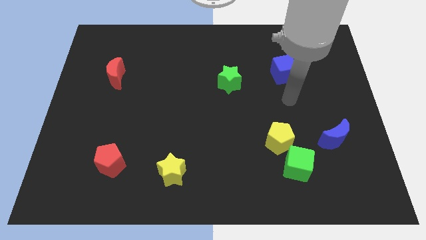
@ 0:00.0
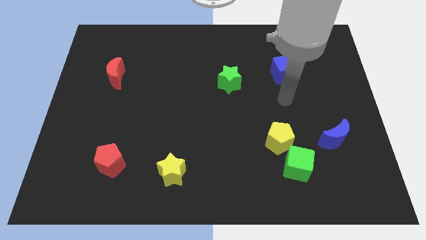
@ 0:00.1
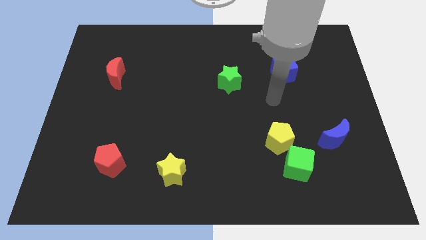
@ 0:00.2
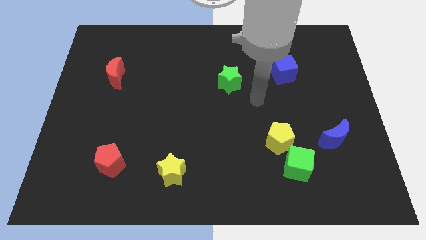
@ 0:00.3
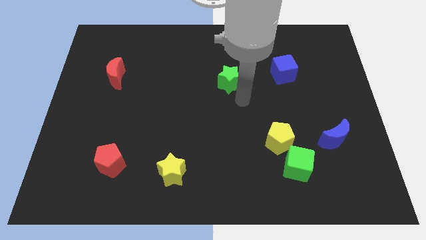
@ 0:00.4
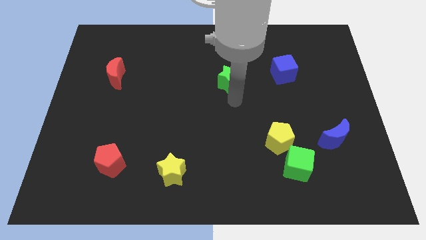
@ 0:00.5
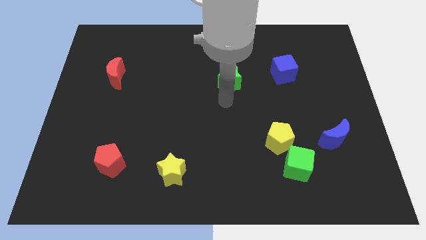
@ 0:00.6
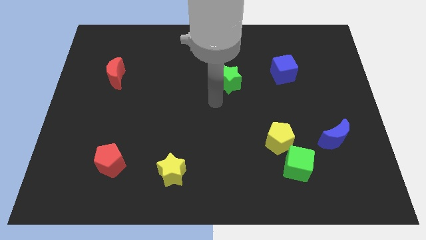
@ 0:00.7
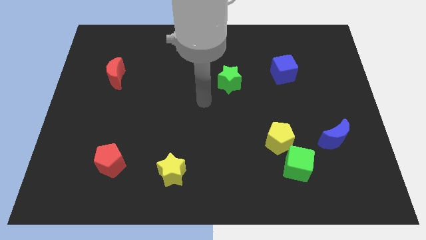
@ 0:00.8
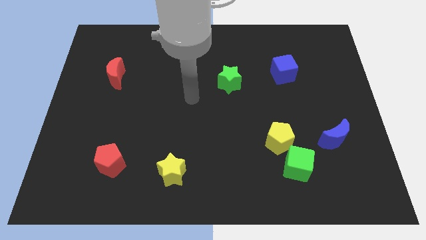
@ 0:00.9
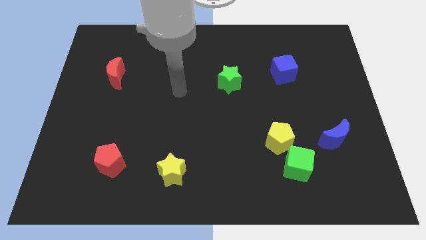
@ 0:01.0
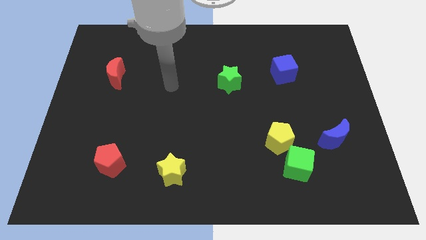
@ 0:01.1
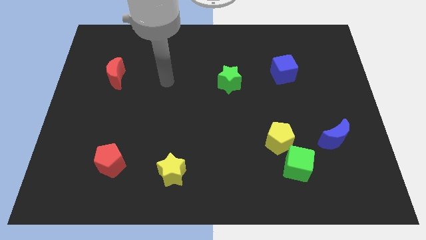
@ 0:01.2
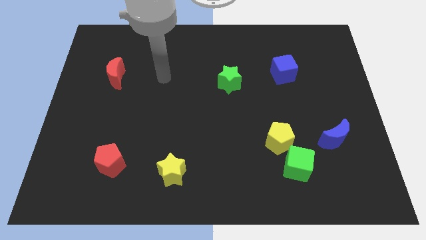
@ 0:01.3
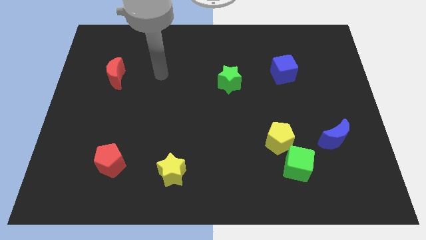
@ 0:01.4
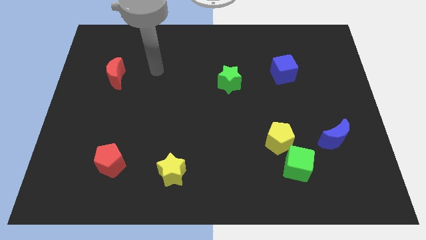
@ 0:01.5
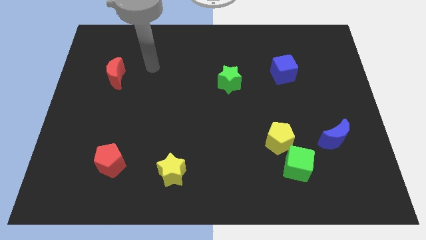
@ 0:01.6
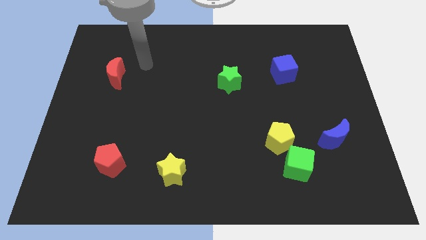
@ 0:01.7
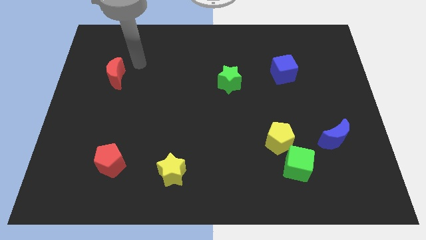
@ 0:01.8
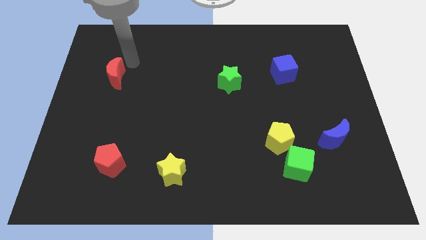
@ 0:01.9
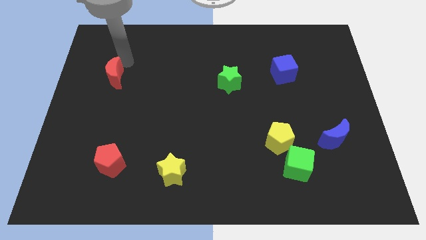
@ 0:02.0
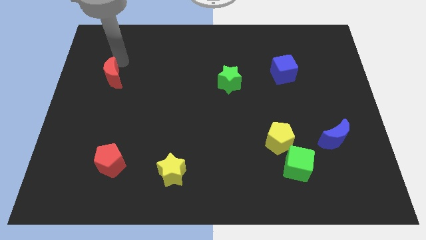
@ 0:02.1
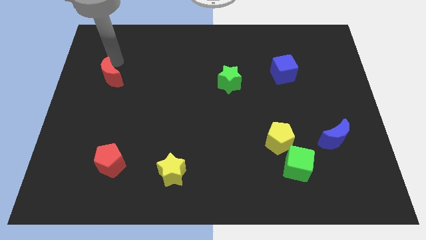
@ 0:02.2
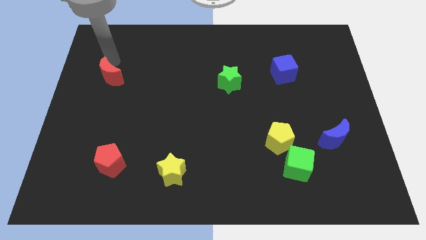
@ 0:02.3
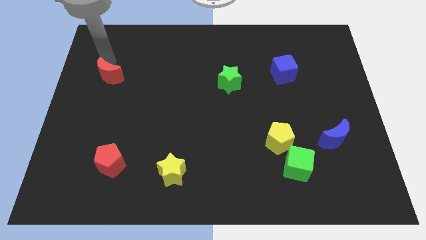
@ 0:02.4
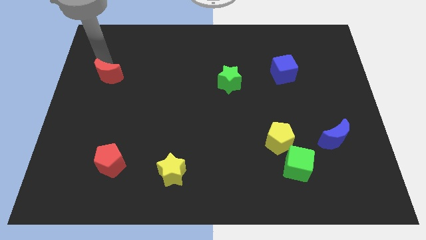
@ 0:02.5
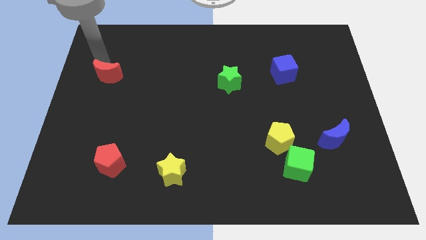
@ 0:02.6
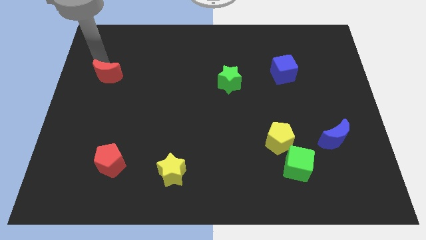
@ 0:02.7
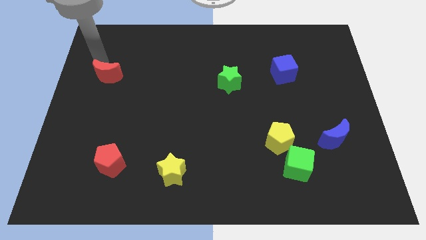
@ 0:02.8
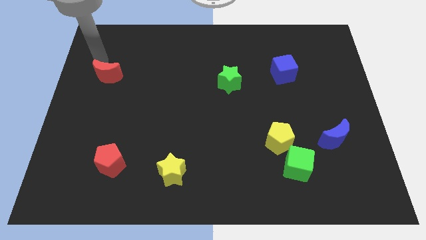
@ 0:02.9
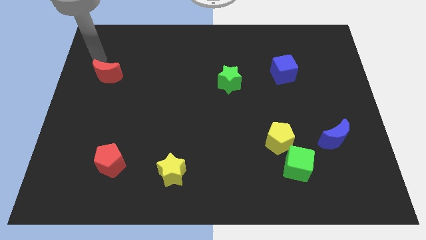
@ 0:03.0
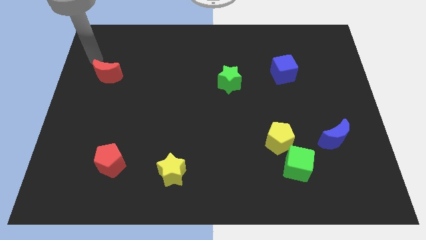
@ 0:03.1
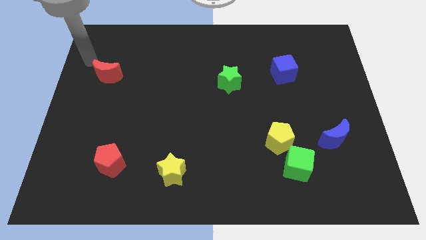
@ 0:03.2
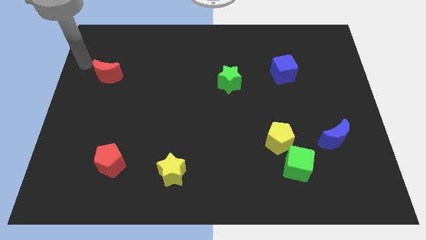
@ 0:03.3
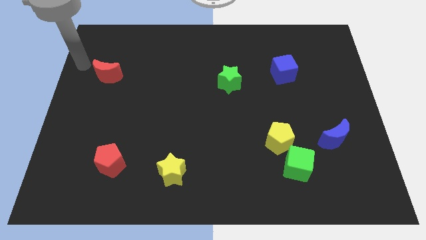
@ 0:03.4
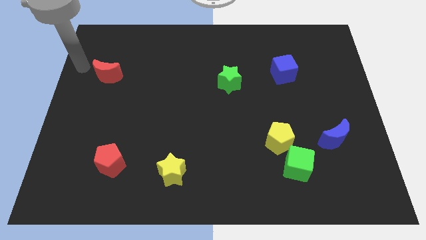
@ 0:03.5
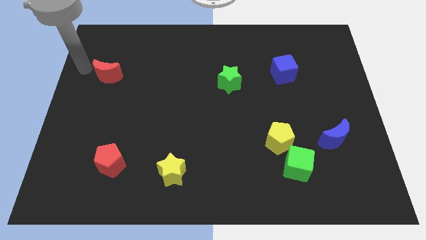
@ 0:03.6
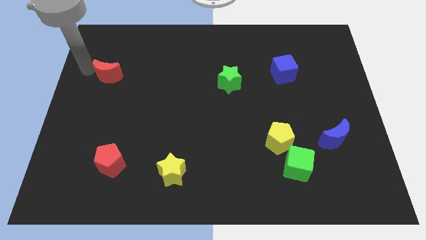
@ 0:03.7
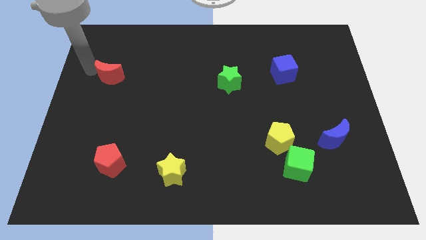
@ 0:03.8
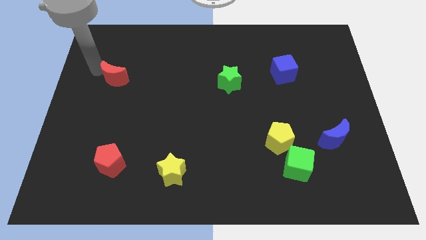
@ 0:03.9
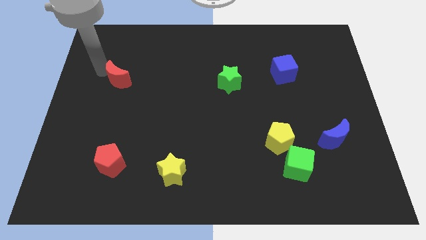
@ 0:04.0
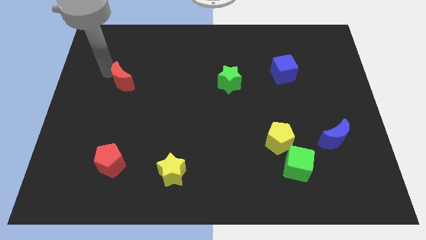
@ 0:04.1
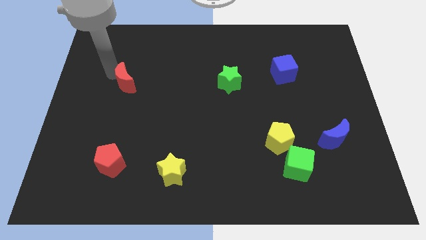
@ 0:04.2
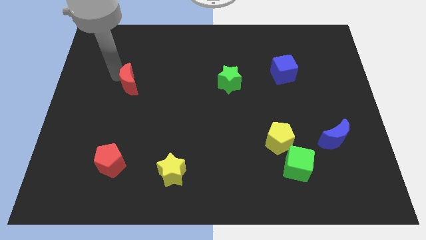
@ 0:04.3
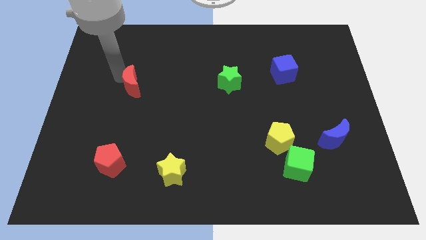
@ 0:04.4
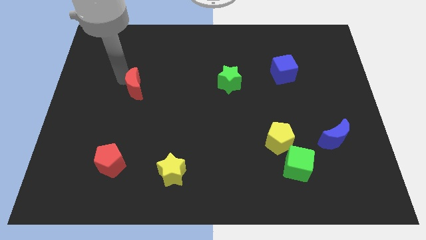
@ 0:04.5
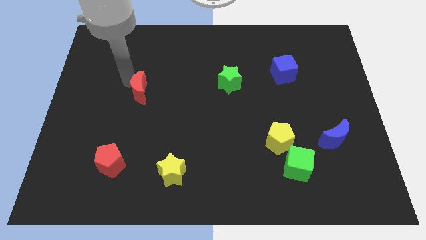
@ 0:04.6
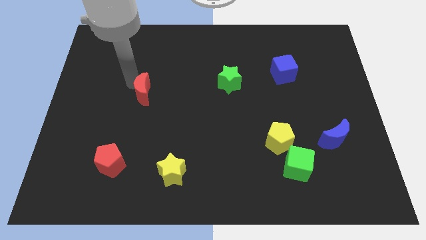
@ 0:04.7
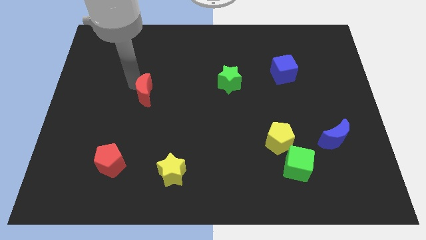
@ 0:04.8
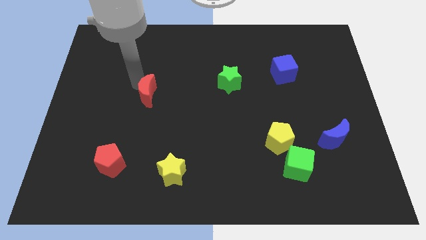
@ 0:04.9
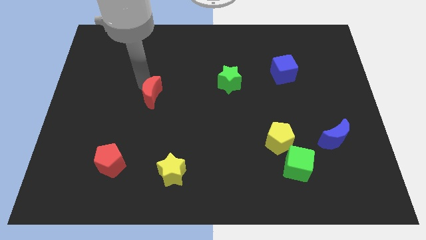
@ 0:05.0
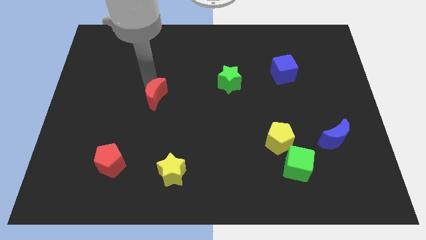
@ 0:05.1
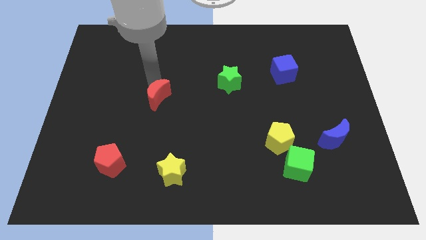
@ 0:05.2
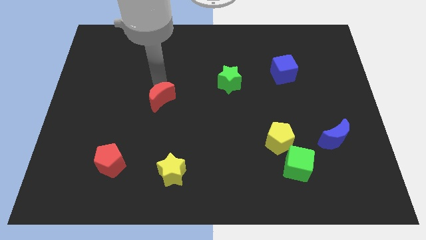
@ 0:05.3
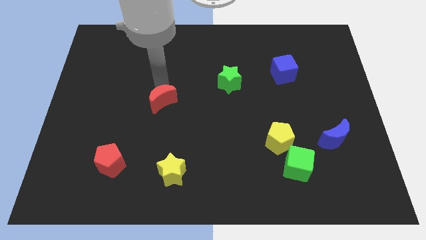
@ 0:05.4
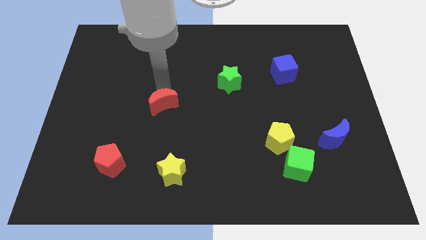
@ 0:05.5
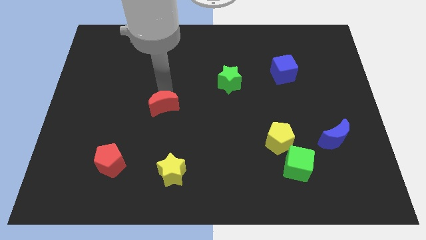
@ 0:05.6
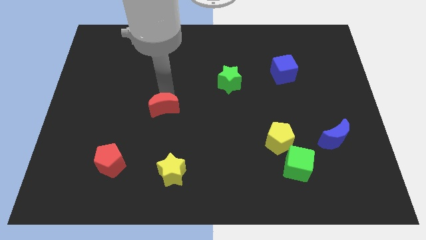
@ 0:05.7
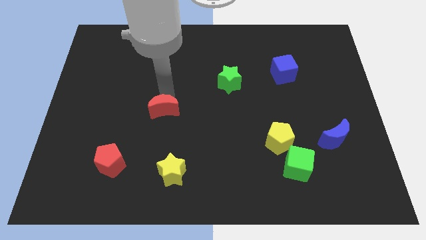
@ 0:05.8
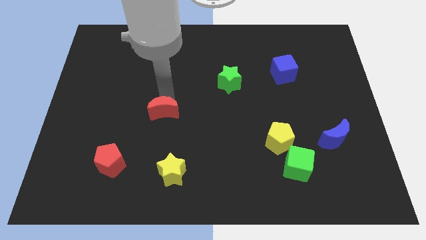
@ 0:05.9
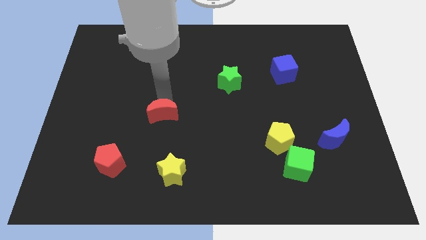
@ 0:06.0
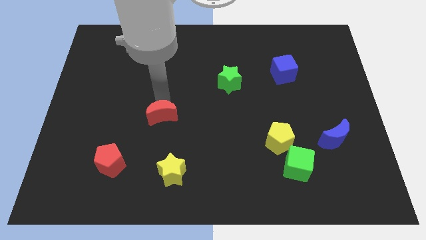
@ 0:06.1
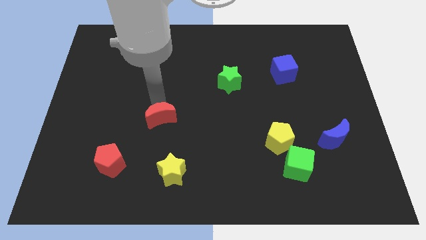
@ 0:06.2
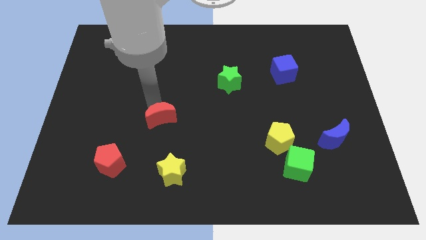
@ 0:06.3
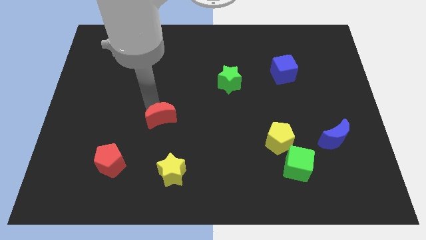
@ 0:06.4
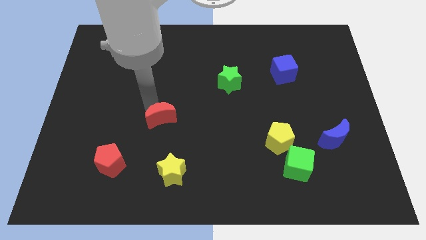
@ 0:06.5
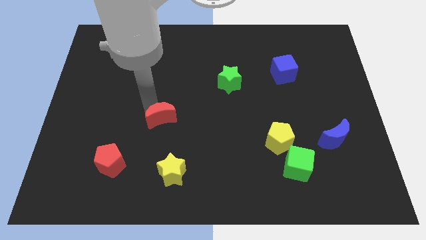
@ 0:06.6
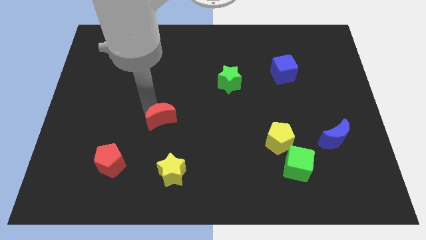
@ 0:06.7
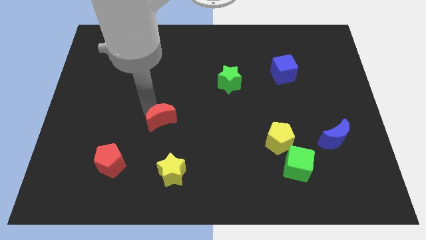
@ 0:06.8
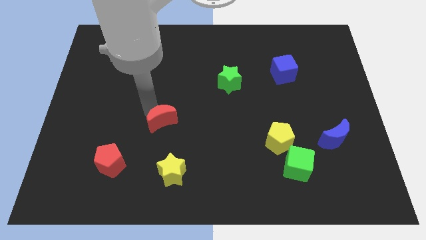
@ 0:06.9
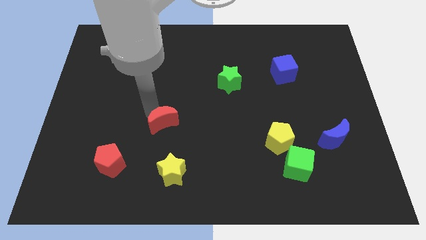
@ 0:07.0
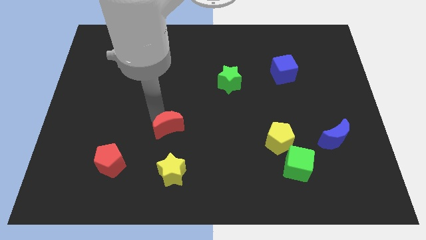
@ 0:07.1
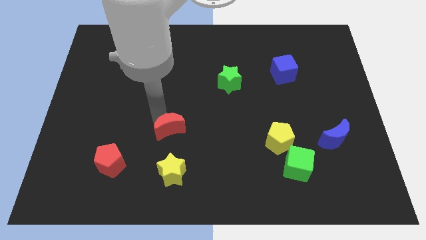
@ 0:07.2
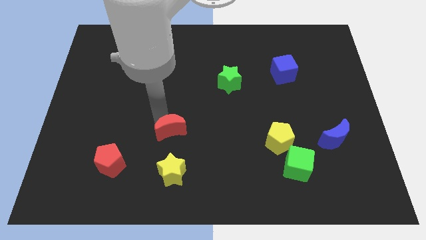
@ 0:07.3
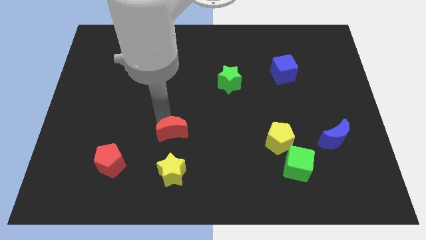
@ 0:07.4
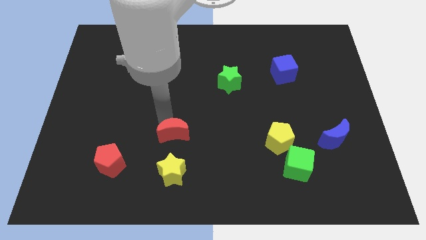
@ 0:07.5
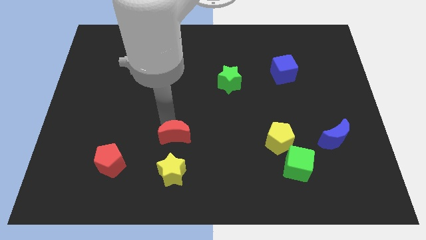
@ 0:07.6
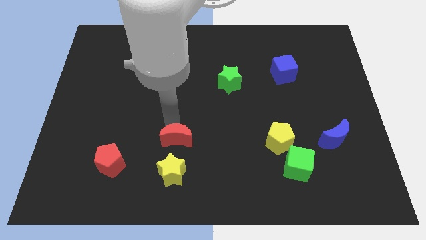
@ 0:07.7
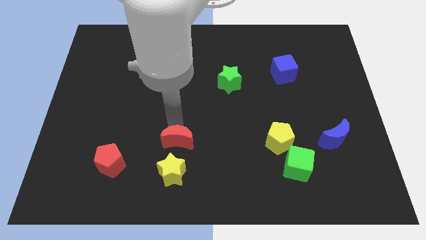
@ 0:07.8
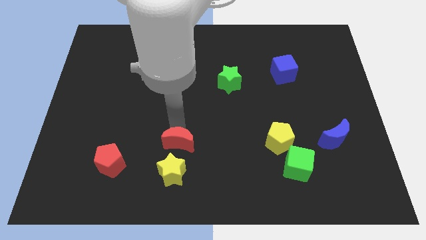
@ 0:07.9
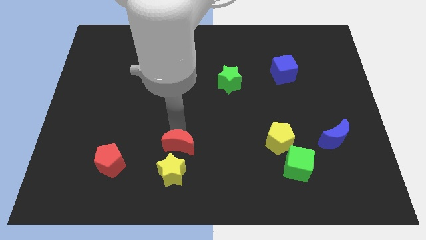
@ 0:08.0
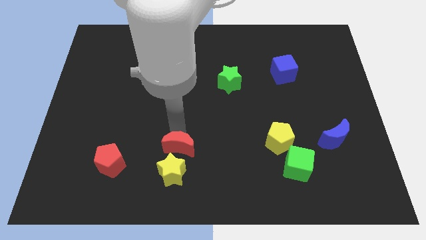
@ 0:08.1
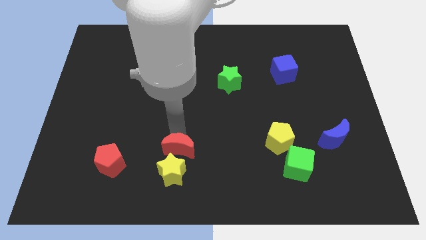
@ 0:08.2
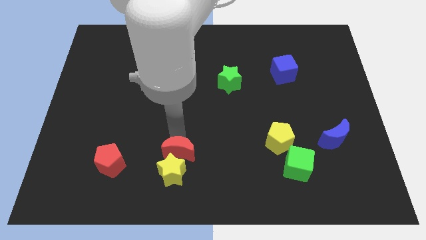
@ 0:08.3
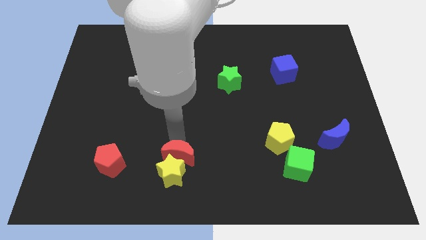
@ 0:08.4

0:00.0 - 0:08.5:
move the red moon next to the yellow star
